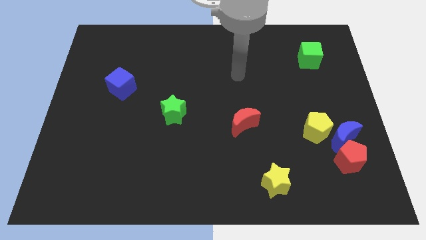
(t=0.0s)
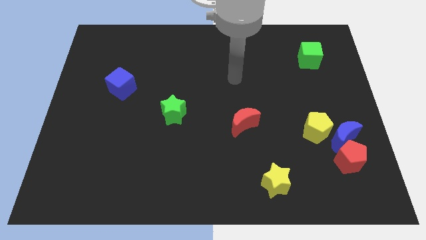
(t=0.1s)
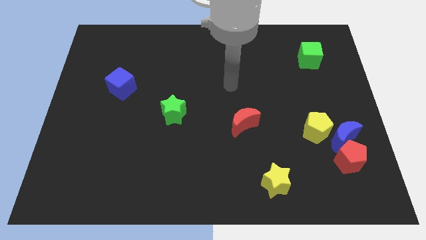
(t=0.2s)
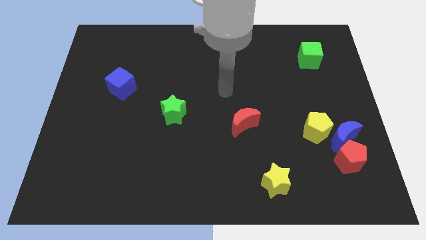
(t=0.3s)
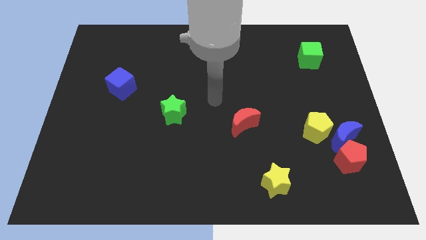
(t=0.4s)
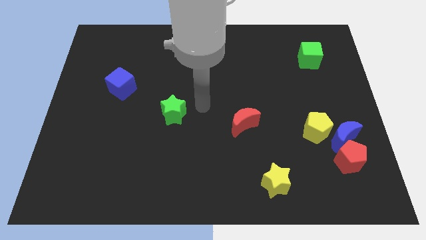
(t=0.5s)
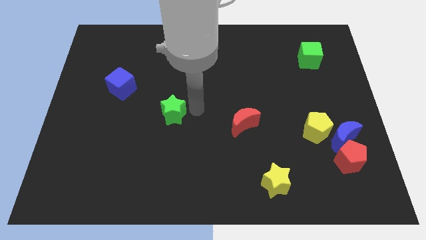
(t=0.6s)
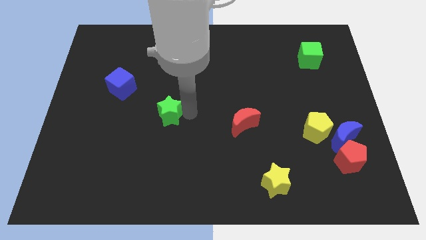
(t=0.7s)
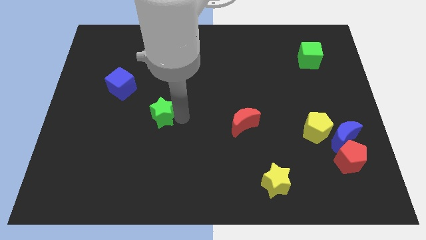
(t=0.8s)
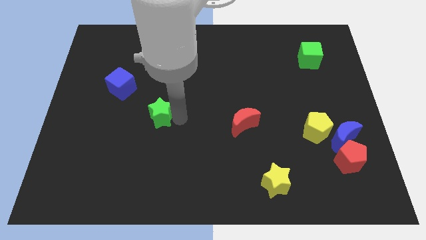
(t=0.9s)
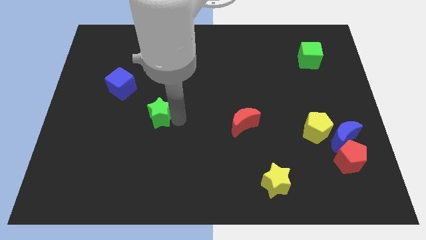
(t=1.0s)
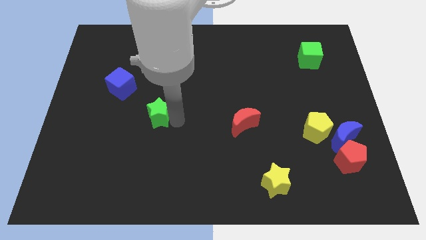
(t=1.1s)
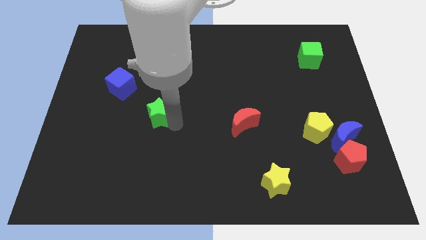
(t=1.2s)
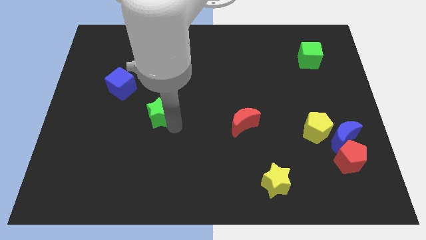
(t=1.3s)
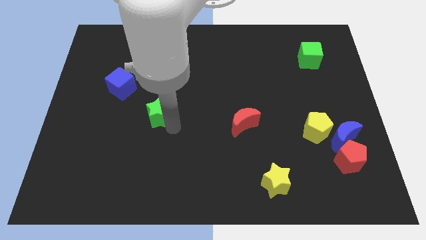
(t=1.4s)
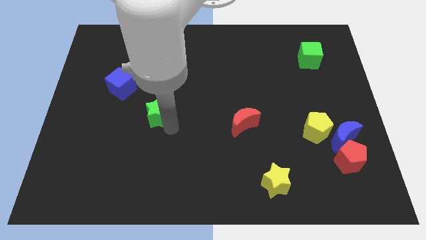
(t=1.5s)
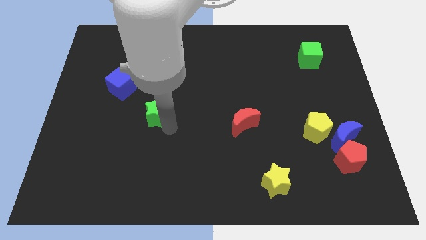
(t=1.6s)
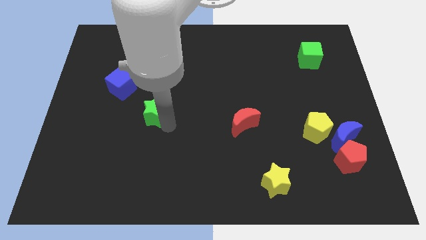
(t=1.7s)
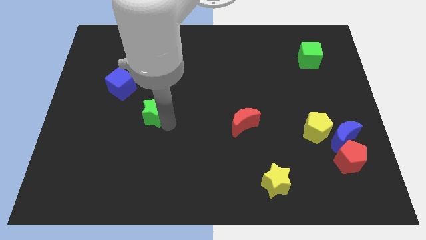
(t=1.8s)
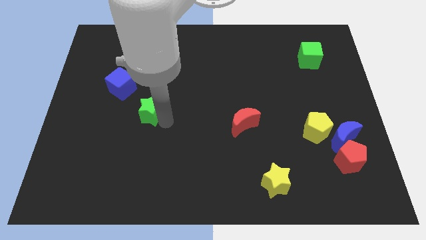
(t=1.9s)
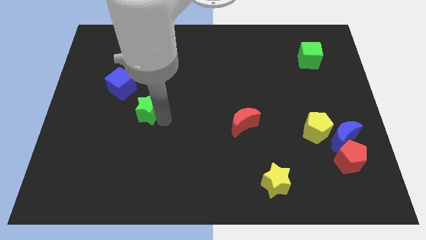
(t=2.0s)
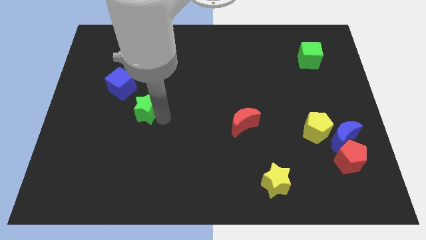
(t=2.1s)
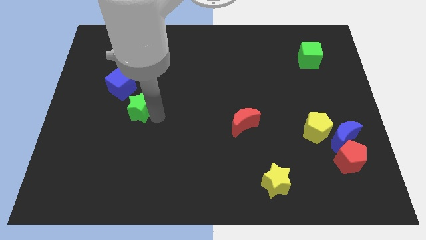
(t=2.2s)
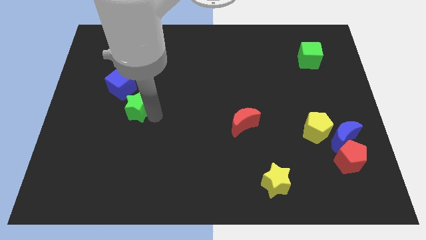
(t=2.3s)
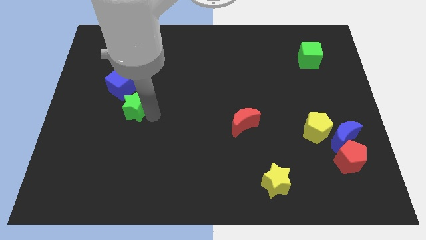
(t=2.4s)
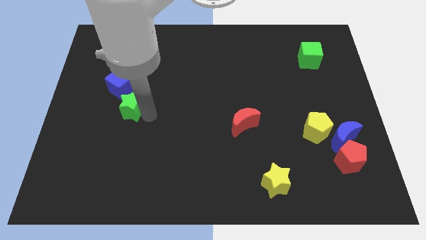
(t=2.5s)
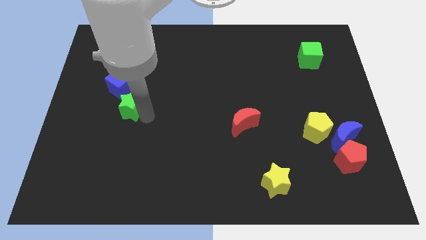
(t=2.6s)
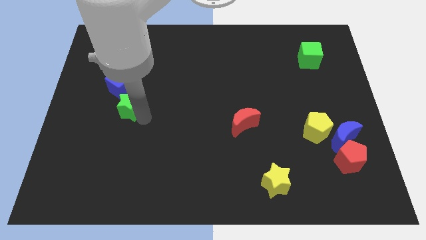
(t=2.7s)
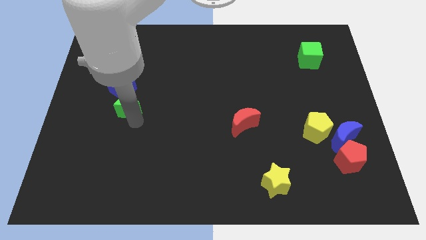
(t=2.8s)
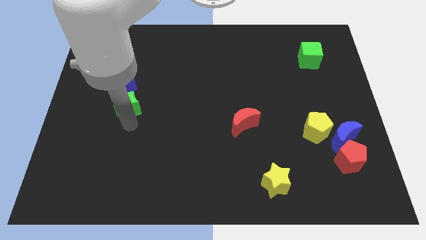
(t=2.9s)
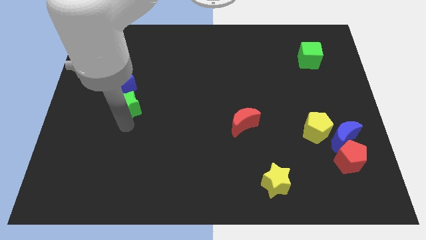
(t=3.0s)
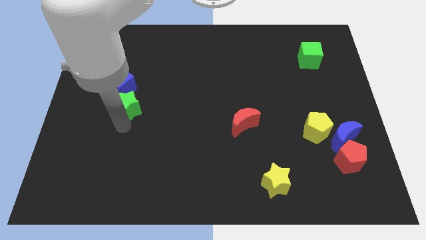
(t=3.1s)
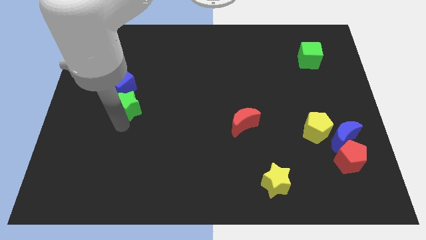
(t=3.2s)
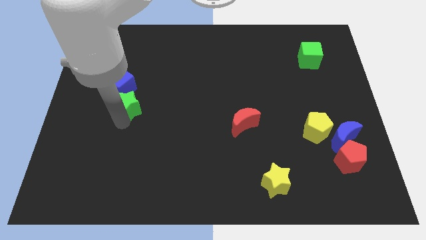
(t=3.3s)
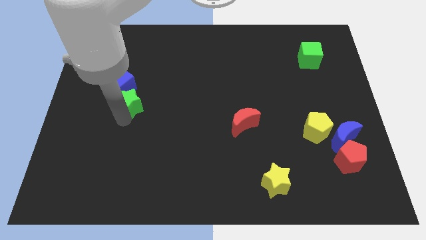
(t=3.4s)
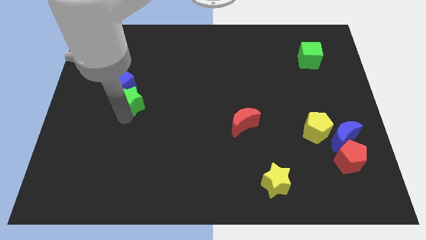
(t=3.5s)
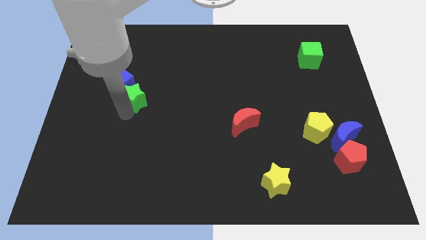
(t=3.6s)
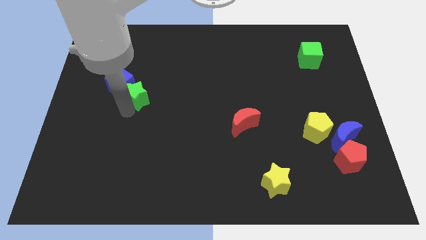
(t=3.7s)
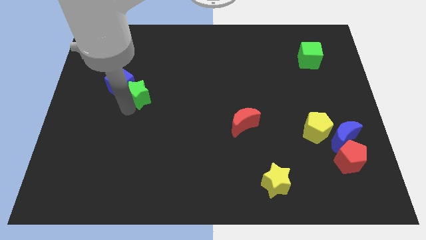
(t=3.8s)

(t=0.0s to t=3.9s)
move the green star close to the blue cube

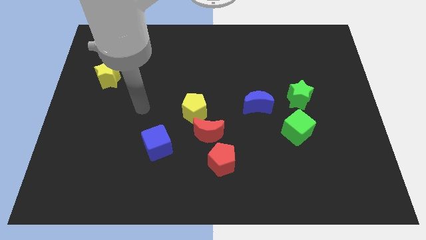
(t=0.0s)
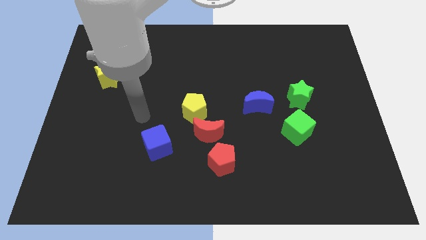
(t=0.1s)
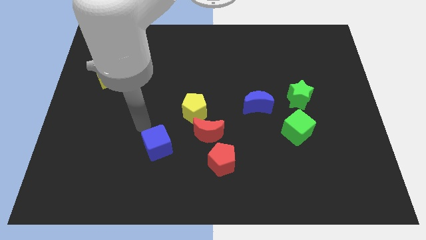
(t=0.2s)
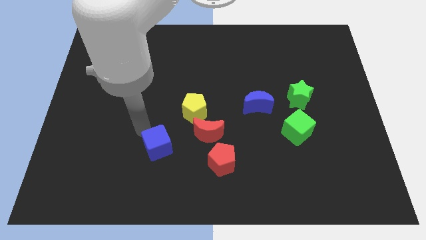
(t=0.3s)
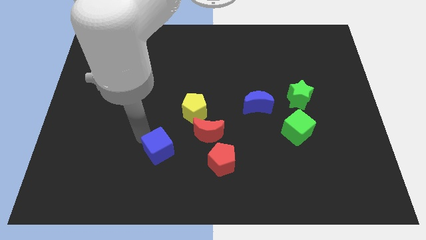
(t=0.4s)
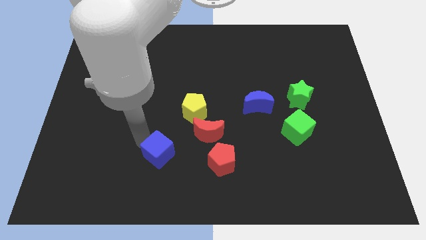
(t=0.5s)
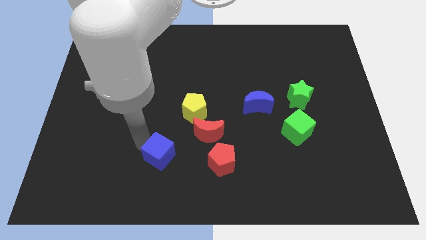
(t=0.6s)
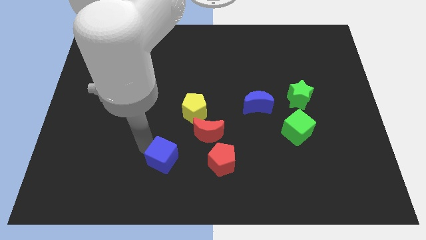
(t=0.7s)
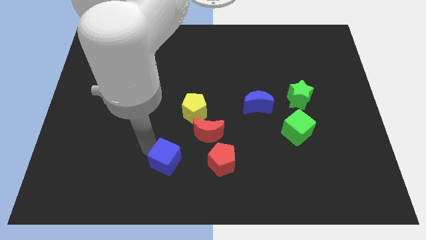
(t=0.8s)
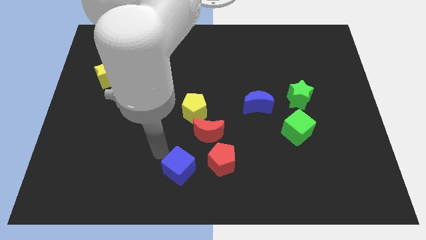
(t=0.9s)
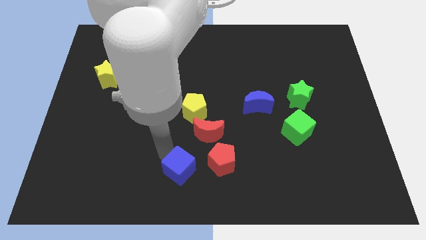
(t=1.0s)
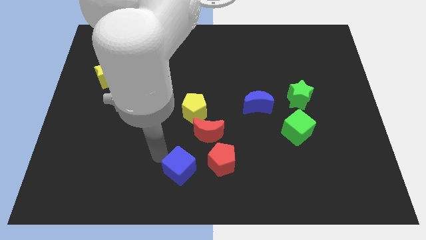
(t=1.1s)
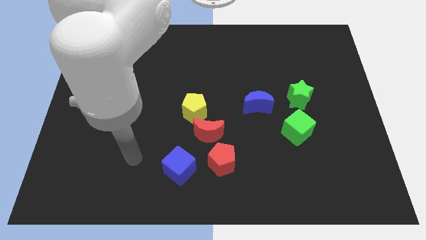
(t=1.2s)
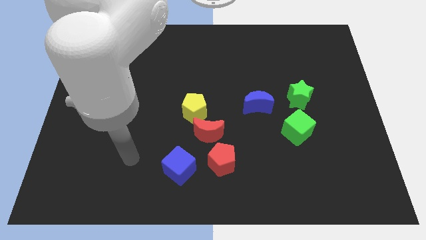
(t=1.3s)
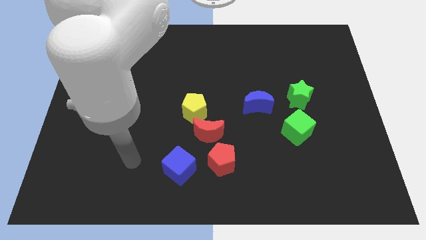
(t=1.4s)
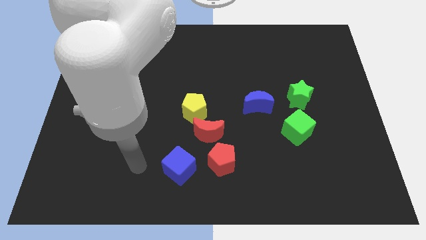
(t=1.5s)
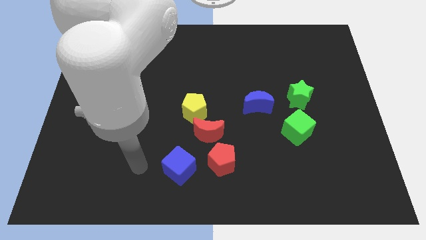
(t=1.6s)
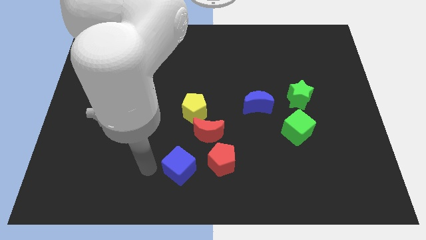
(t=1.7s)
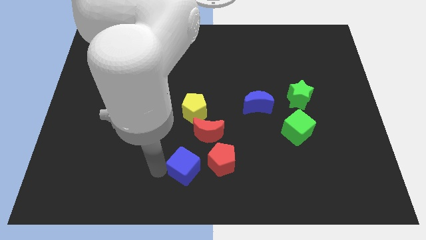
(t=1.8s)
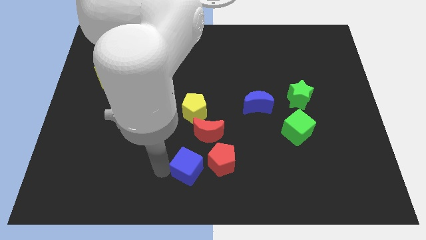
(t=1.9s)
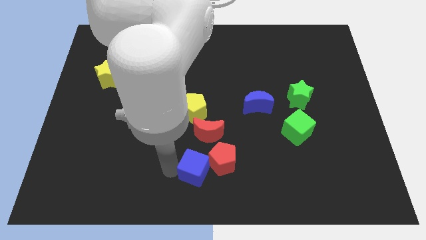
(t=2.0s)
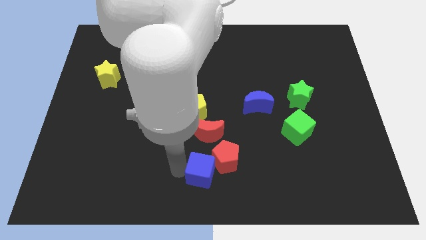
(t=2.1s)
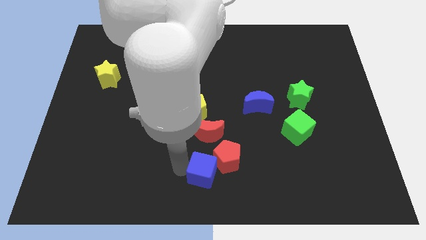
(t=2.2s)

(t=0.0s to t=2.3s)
push the blue cube close to the red pentagon

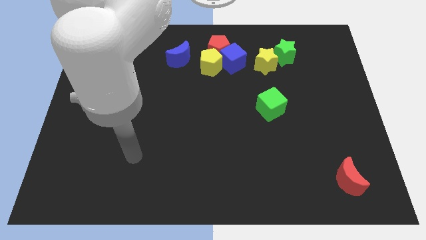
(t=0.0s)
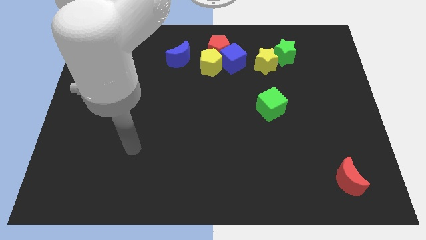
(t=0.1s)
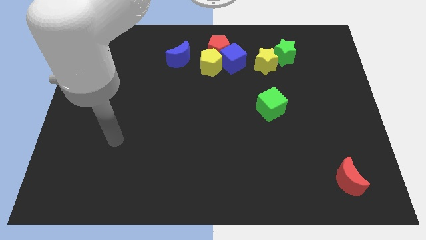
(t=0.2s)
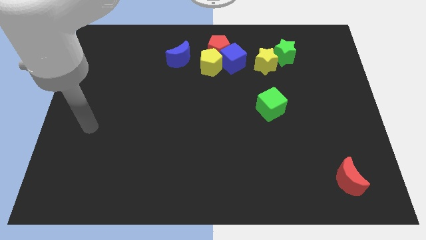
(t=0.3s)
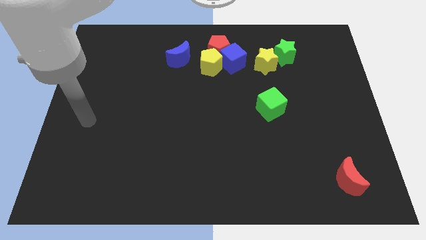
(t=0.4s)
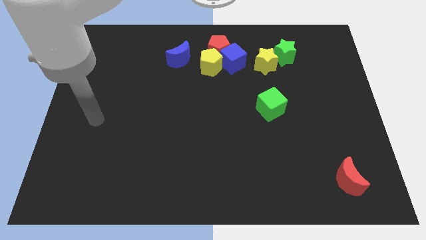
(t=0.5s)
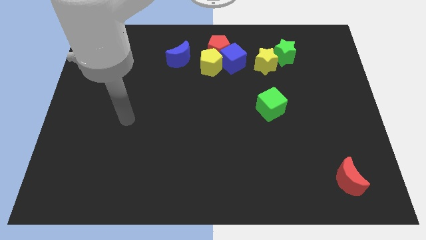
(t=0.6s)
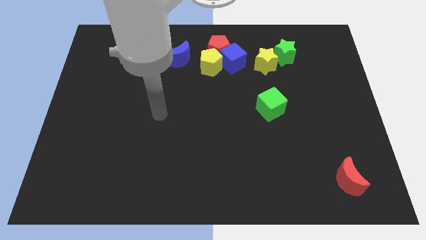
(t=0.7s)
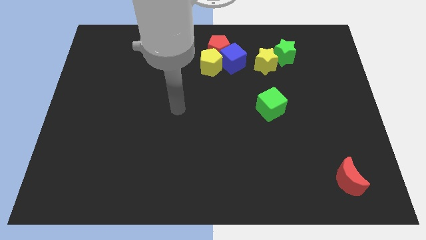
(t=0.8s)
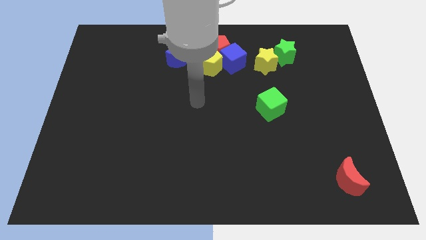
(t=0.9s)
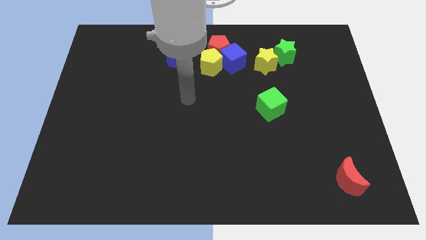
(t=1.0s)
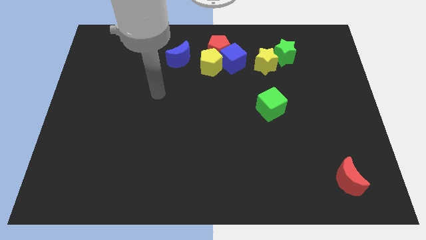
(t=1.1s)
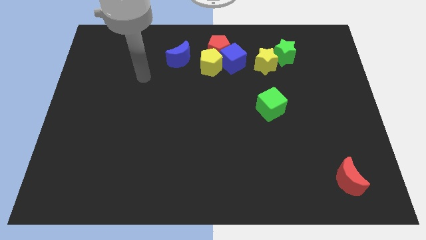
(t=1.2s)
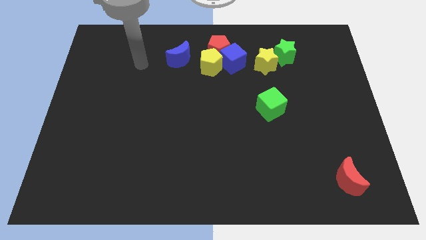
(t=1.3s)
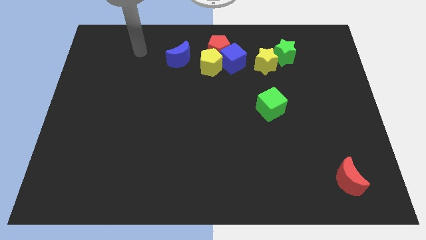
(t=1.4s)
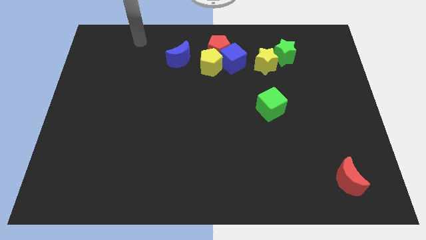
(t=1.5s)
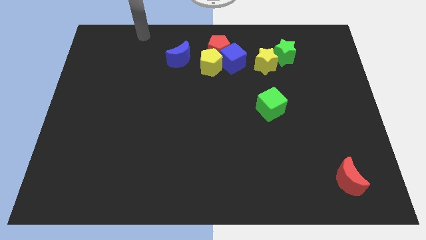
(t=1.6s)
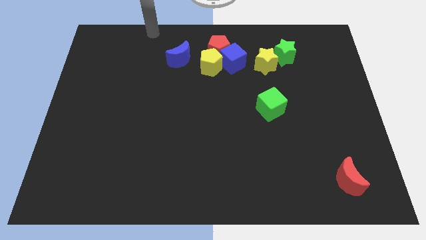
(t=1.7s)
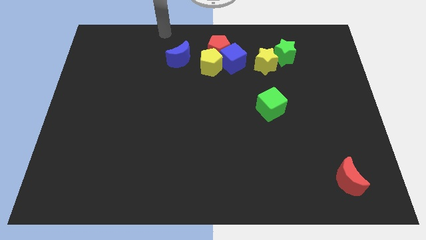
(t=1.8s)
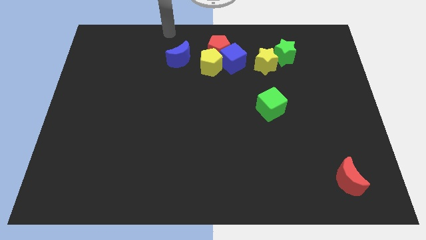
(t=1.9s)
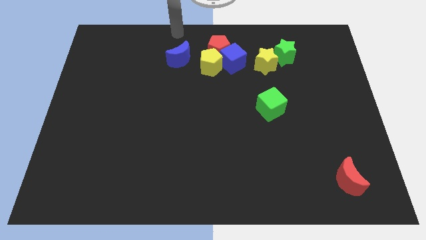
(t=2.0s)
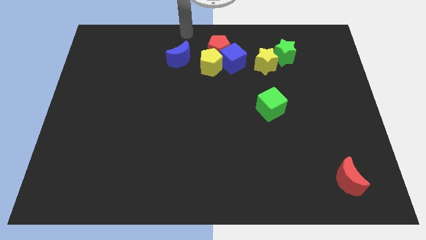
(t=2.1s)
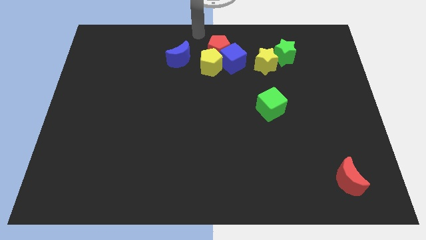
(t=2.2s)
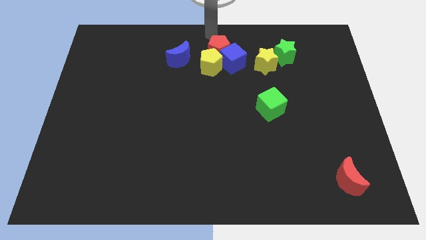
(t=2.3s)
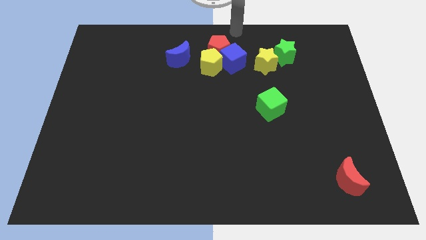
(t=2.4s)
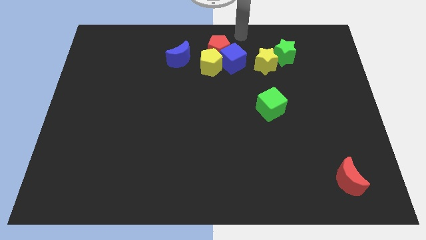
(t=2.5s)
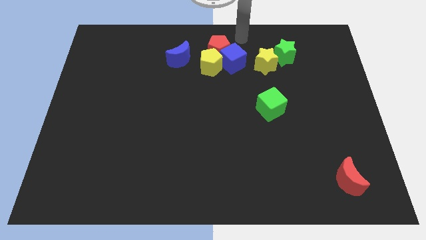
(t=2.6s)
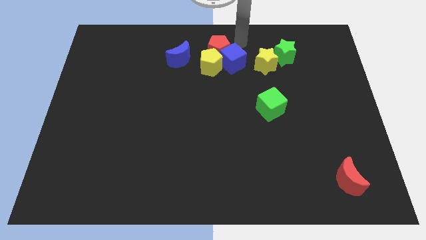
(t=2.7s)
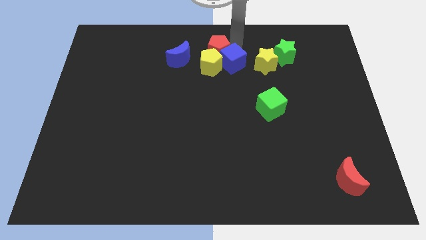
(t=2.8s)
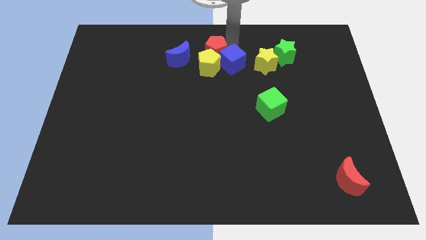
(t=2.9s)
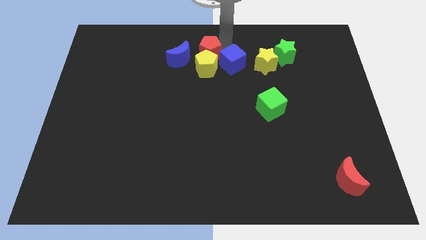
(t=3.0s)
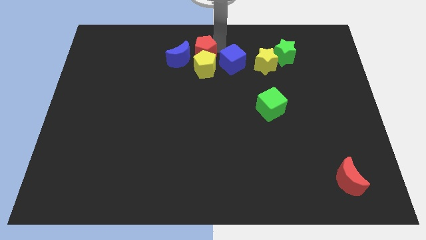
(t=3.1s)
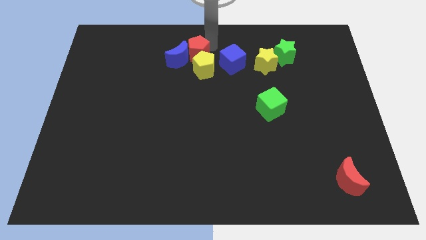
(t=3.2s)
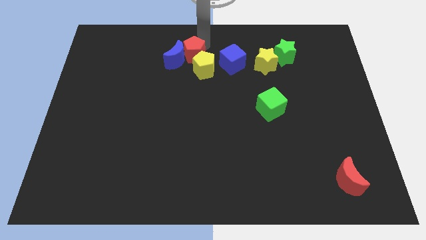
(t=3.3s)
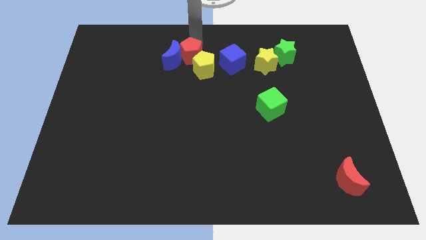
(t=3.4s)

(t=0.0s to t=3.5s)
move the red pentagon towards the blue moon
